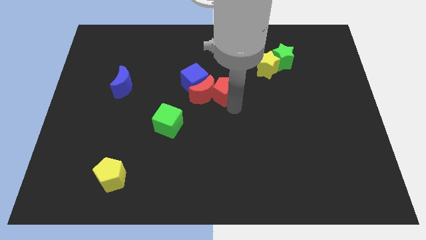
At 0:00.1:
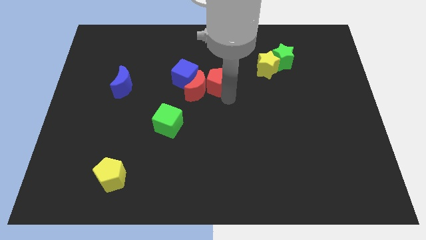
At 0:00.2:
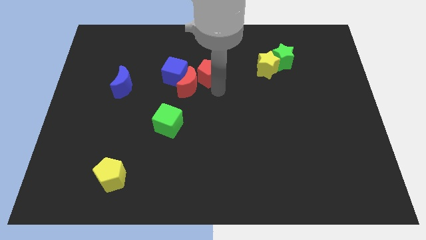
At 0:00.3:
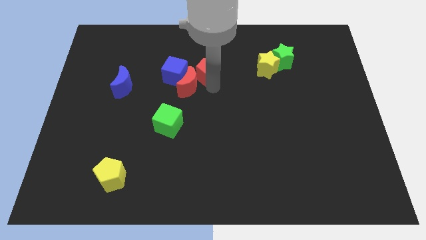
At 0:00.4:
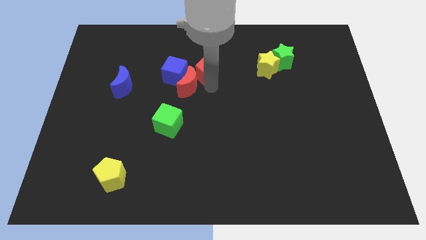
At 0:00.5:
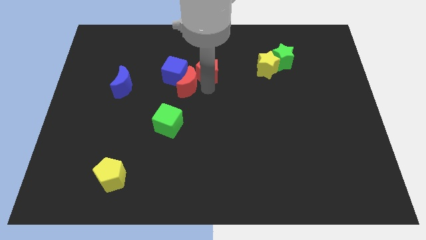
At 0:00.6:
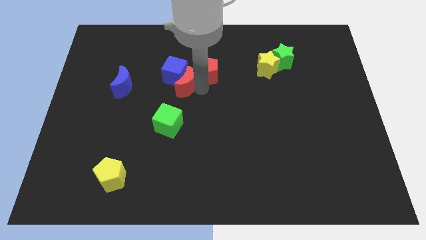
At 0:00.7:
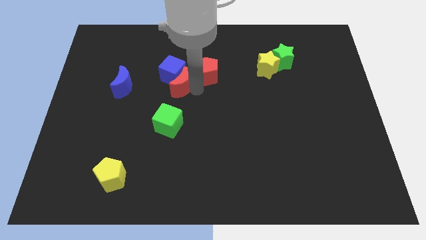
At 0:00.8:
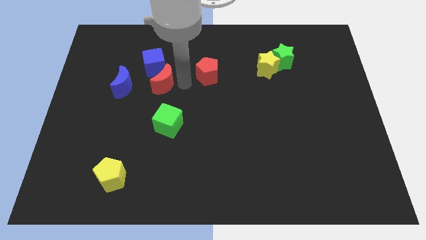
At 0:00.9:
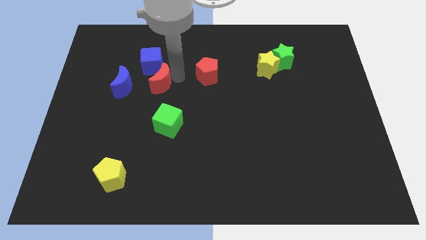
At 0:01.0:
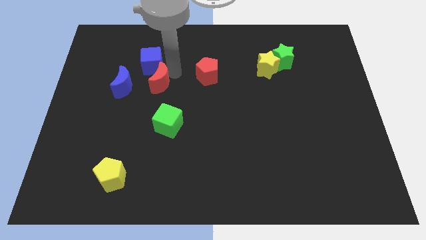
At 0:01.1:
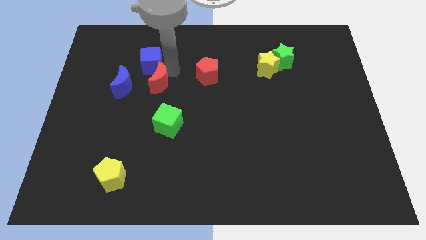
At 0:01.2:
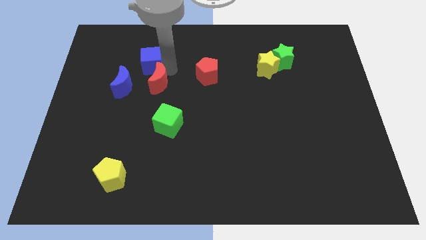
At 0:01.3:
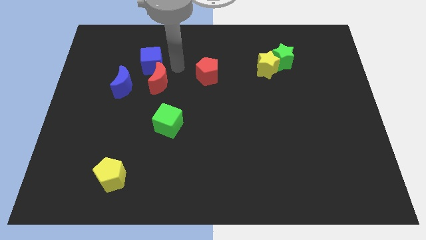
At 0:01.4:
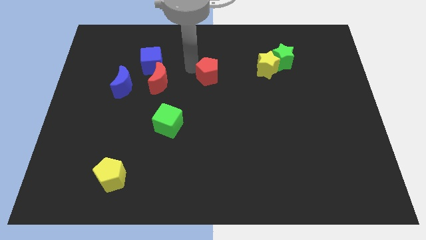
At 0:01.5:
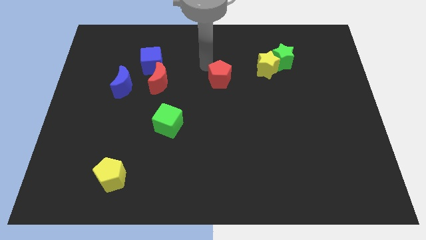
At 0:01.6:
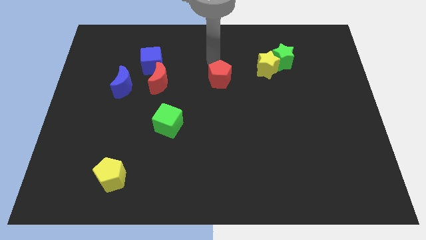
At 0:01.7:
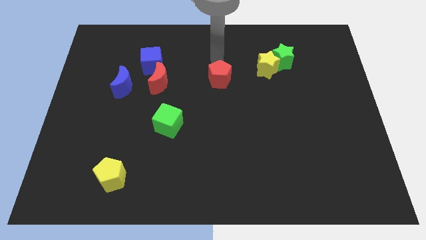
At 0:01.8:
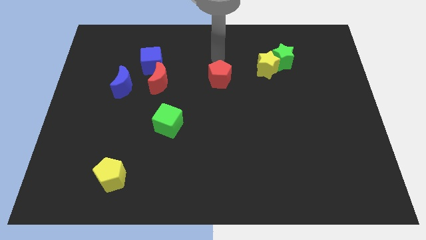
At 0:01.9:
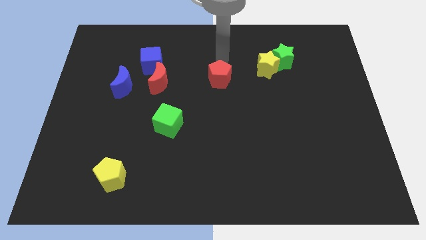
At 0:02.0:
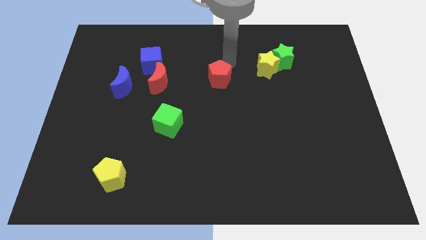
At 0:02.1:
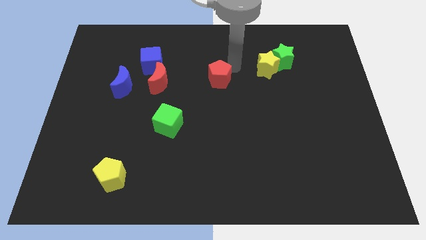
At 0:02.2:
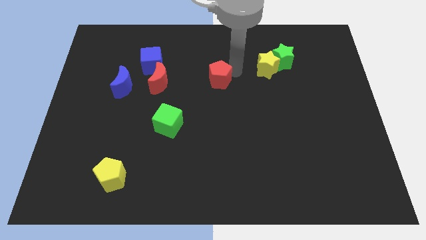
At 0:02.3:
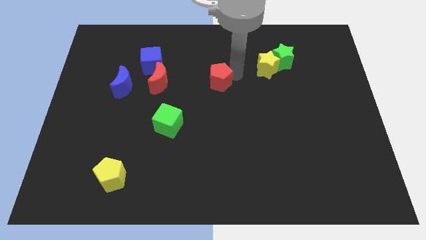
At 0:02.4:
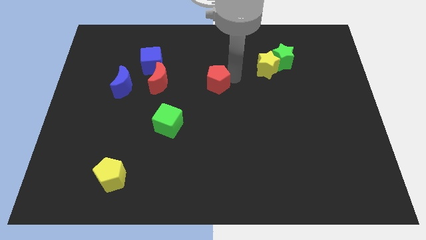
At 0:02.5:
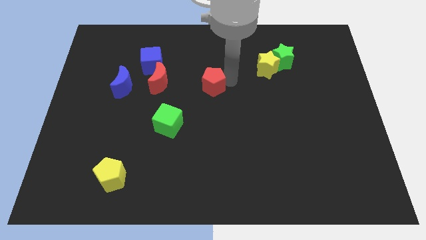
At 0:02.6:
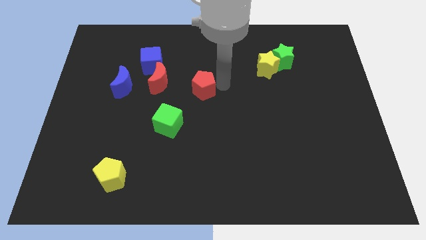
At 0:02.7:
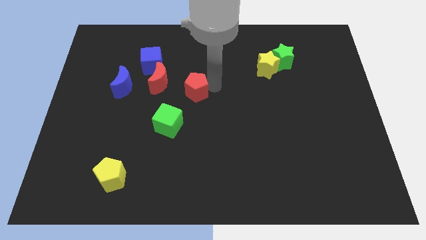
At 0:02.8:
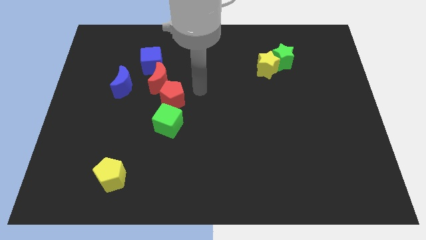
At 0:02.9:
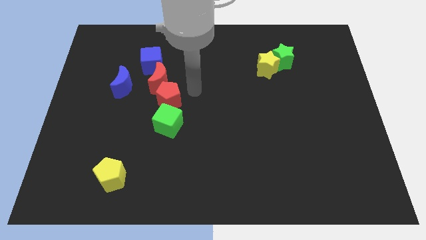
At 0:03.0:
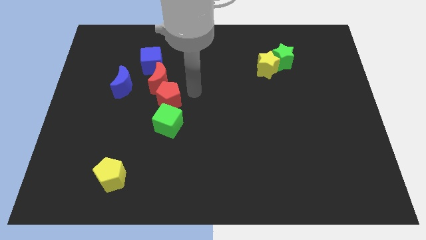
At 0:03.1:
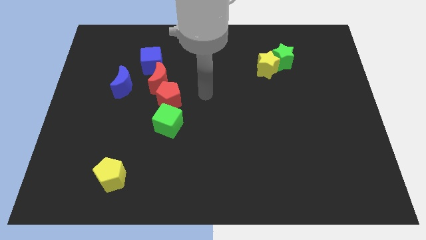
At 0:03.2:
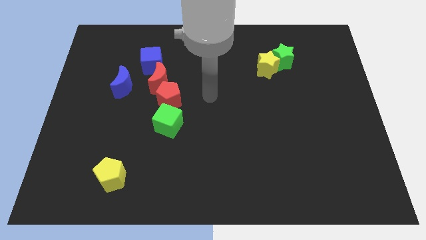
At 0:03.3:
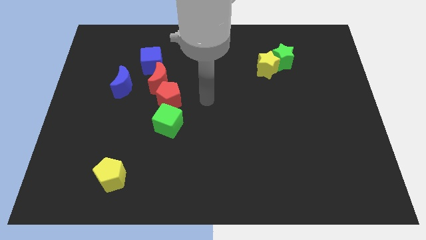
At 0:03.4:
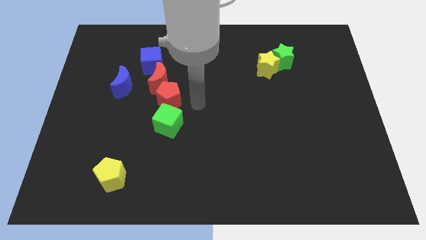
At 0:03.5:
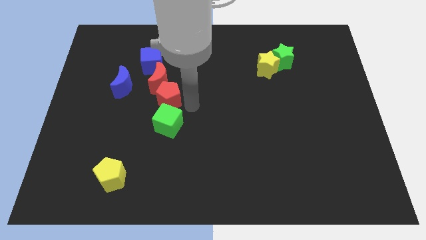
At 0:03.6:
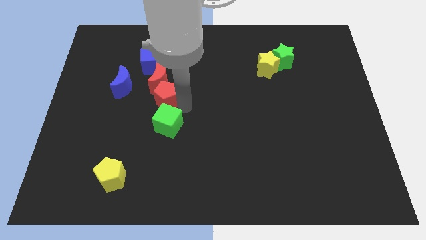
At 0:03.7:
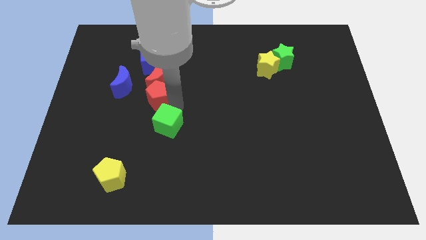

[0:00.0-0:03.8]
place the pentagon in between red moon and green cube

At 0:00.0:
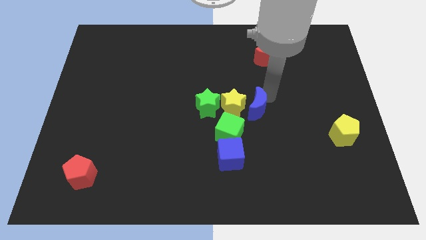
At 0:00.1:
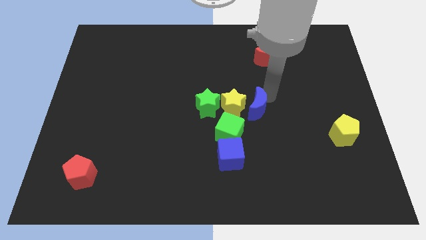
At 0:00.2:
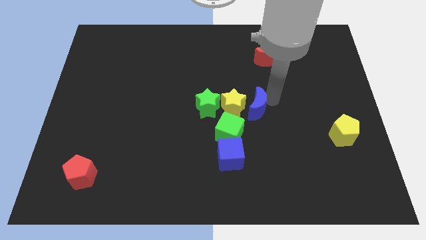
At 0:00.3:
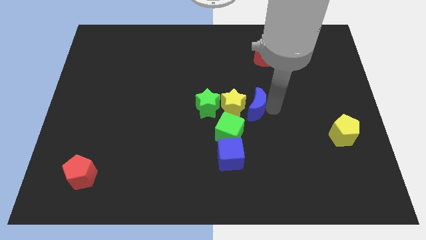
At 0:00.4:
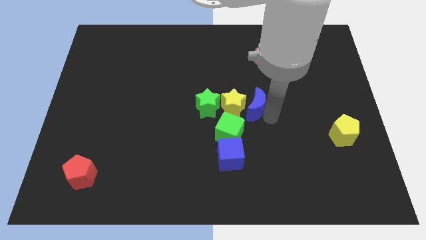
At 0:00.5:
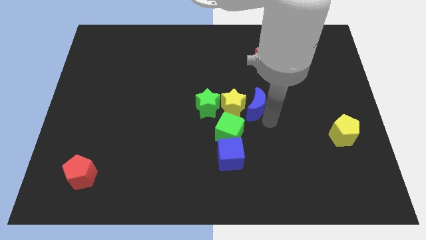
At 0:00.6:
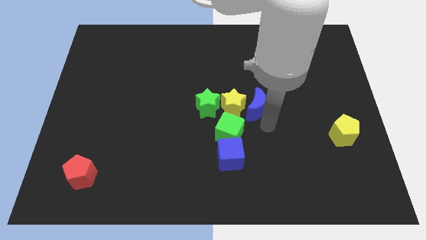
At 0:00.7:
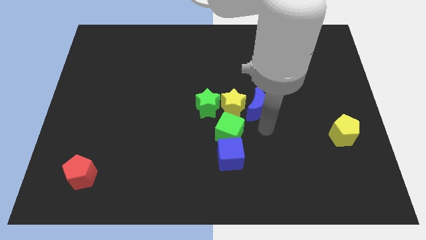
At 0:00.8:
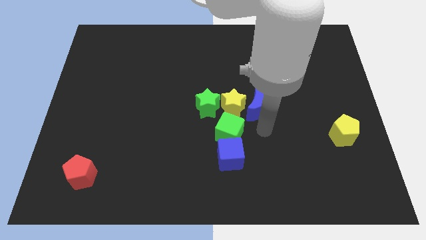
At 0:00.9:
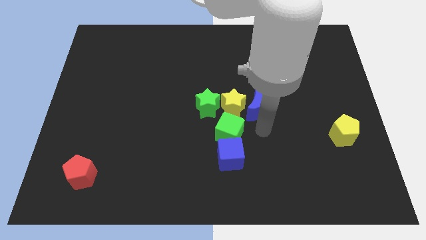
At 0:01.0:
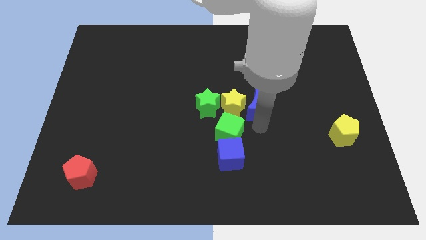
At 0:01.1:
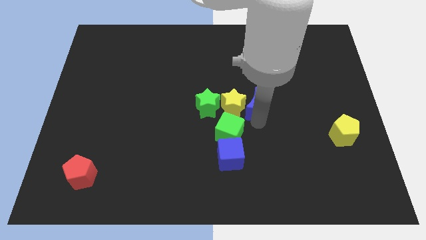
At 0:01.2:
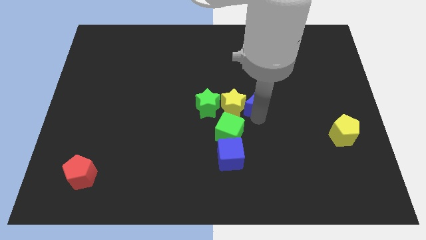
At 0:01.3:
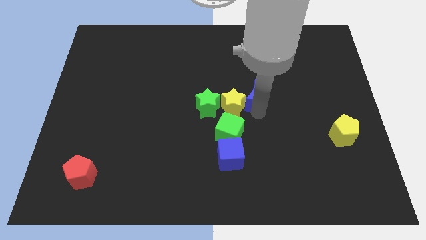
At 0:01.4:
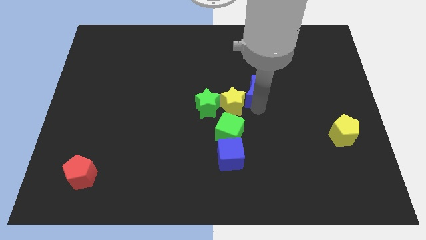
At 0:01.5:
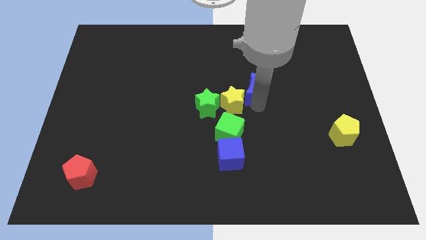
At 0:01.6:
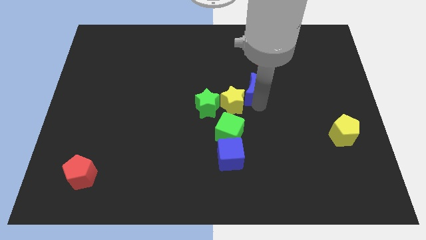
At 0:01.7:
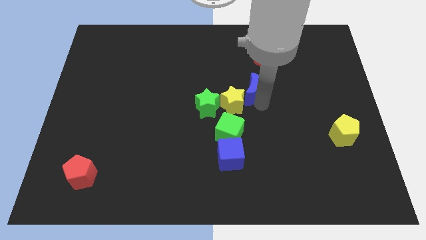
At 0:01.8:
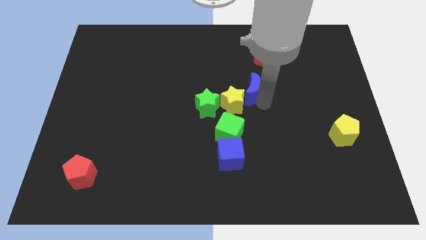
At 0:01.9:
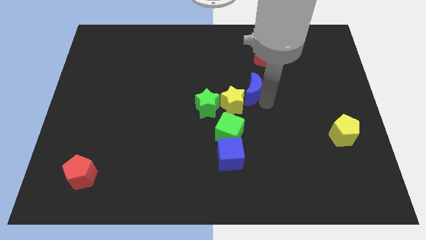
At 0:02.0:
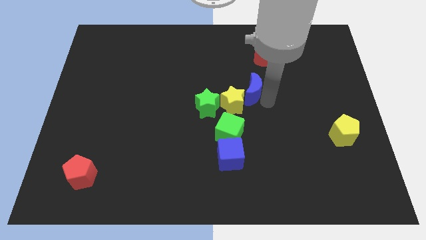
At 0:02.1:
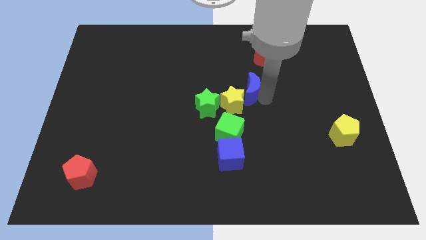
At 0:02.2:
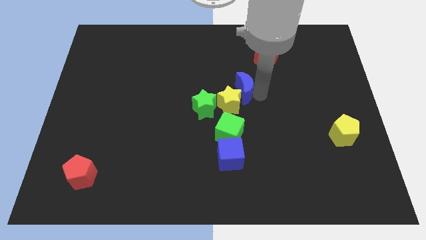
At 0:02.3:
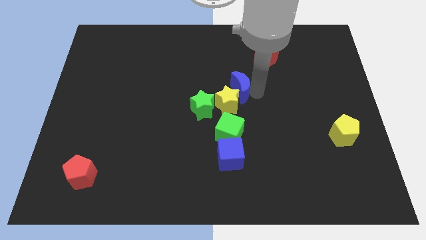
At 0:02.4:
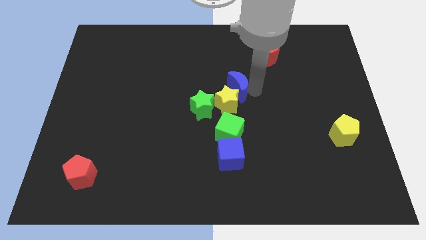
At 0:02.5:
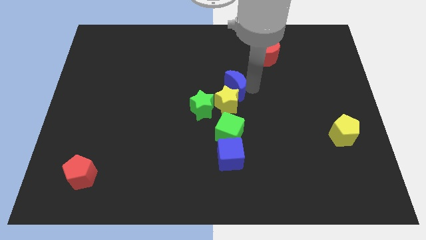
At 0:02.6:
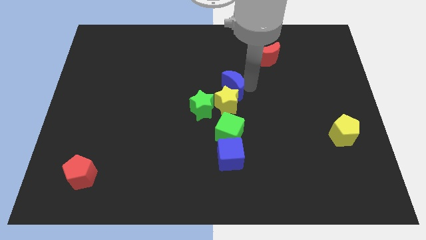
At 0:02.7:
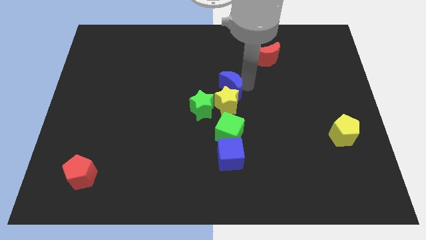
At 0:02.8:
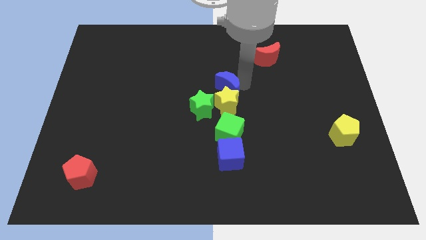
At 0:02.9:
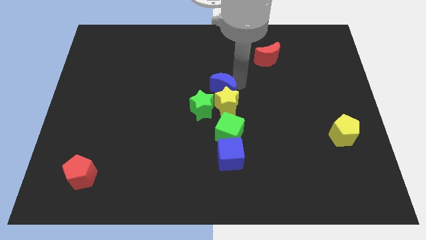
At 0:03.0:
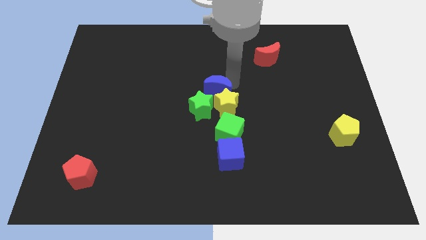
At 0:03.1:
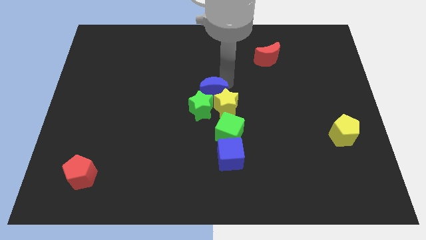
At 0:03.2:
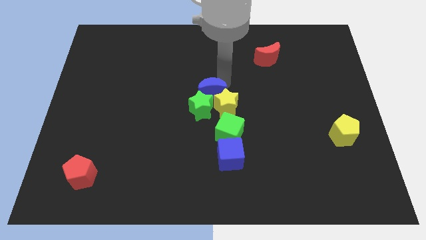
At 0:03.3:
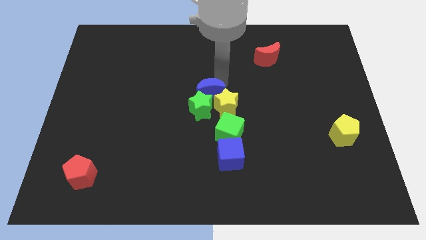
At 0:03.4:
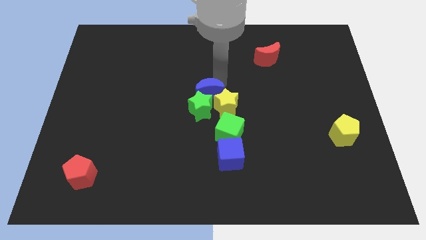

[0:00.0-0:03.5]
put the blue moon above the green star and yellow star

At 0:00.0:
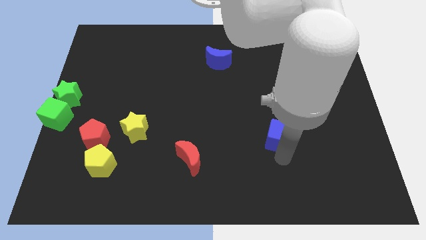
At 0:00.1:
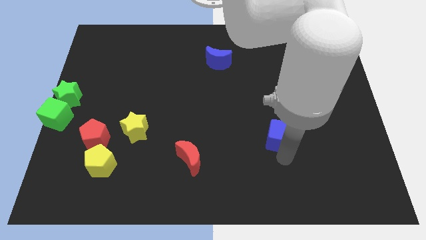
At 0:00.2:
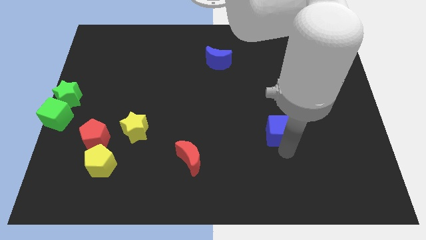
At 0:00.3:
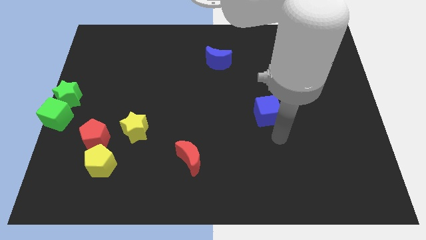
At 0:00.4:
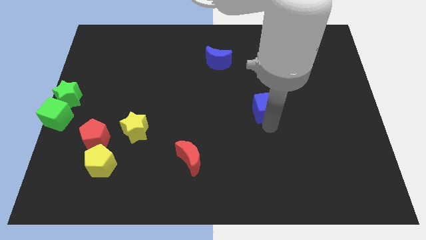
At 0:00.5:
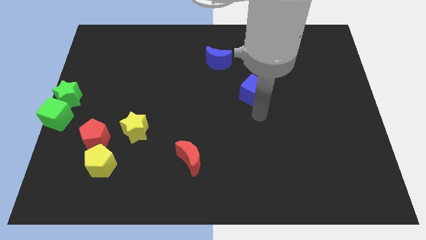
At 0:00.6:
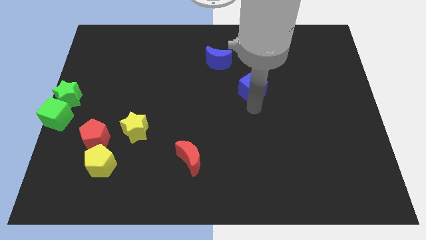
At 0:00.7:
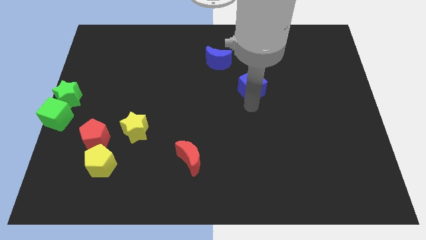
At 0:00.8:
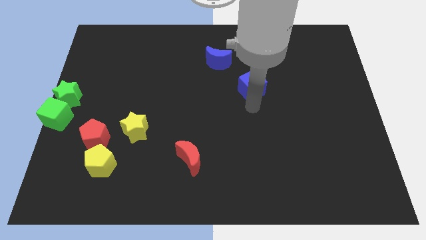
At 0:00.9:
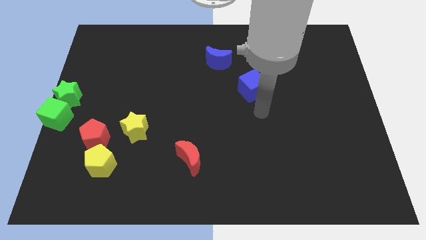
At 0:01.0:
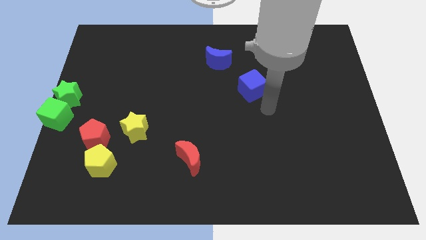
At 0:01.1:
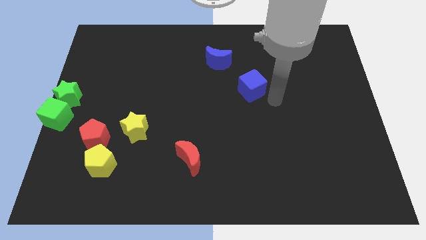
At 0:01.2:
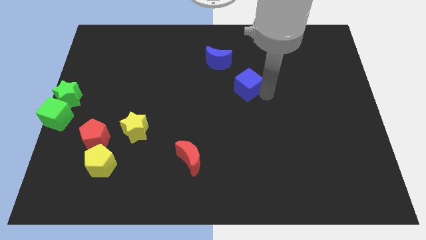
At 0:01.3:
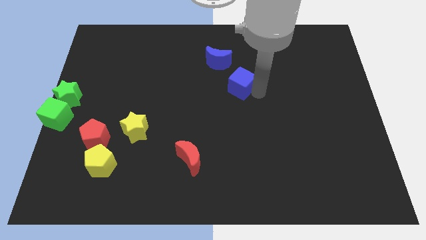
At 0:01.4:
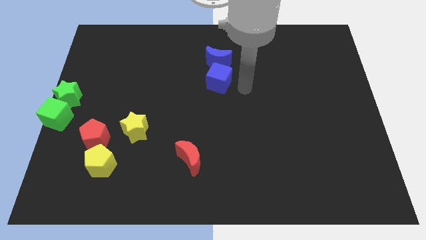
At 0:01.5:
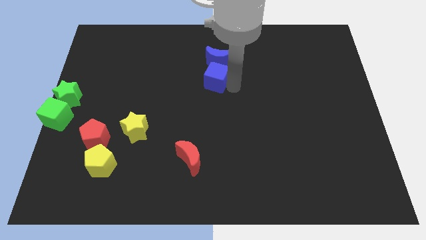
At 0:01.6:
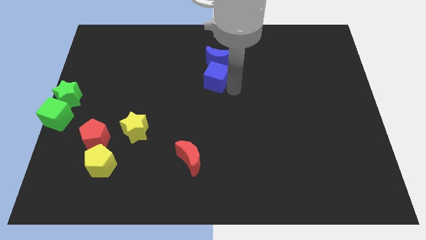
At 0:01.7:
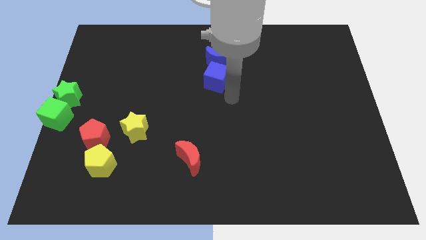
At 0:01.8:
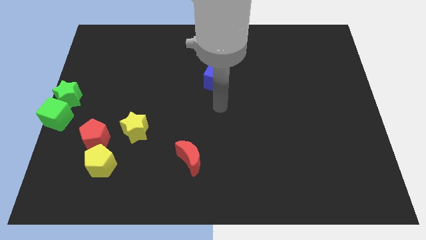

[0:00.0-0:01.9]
push the blue cube to the bottom side of the blue moon
